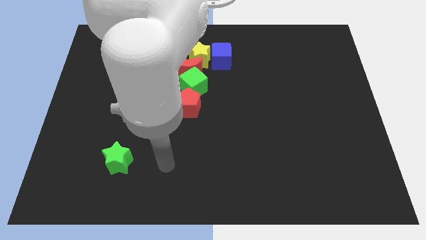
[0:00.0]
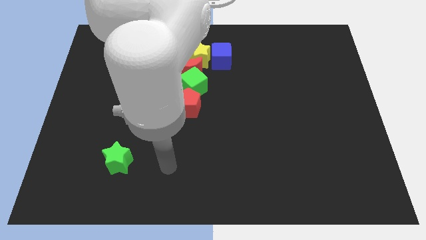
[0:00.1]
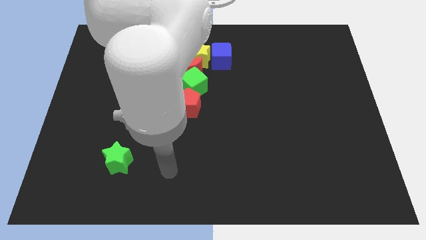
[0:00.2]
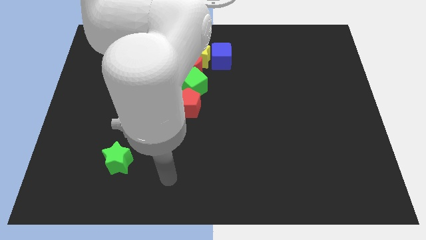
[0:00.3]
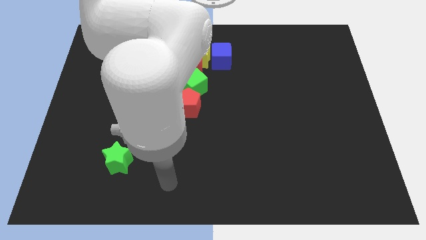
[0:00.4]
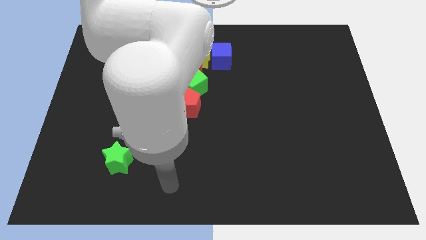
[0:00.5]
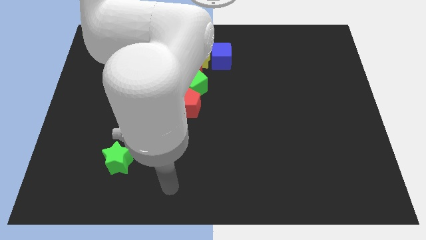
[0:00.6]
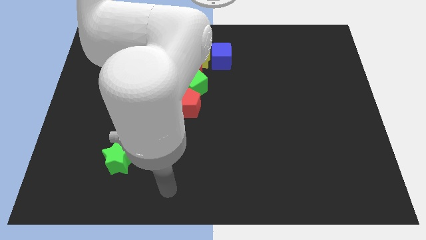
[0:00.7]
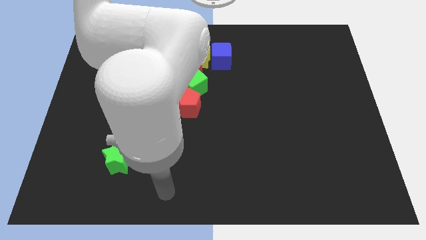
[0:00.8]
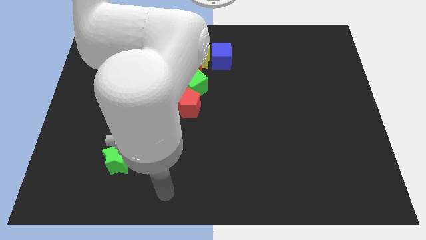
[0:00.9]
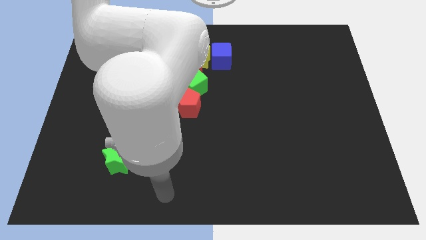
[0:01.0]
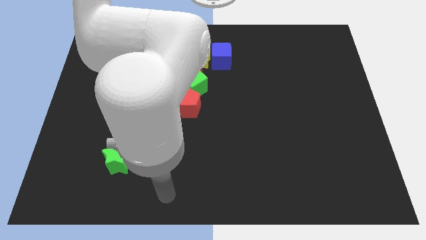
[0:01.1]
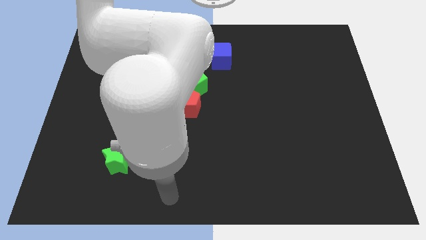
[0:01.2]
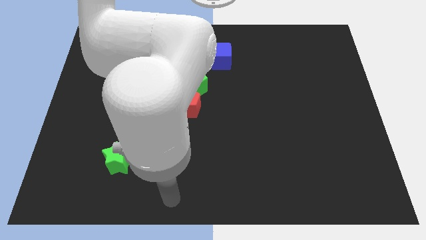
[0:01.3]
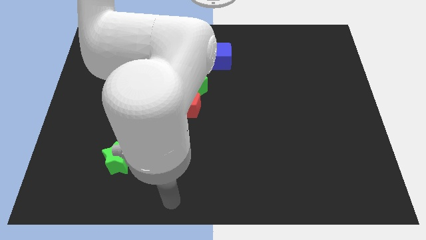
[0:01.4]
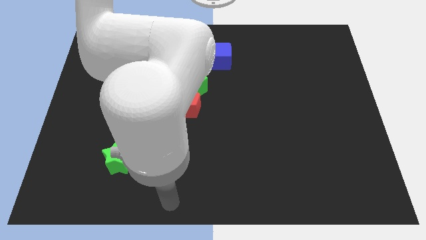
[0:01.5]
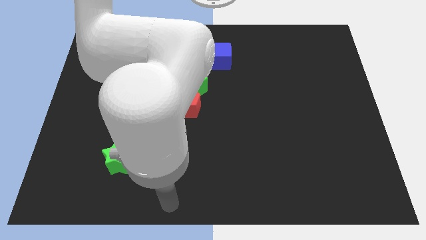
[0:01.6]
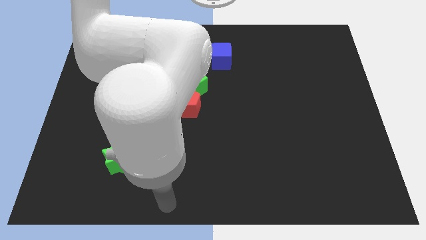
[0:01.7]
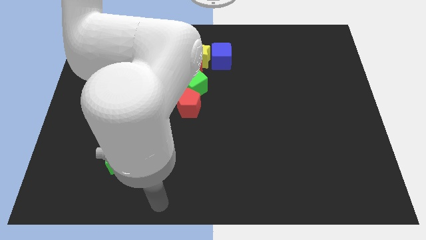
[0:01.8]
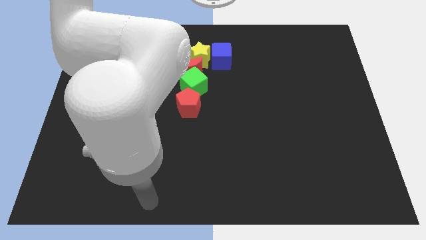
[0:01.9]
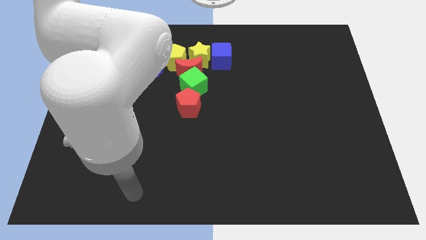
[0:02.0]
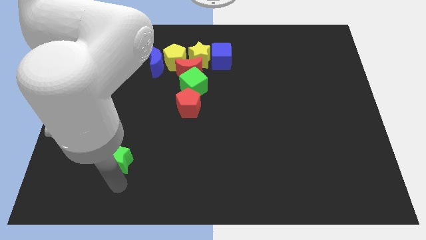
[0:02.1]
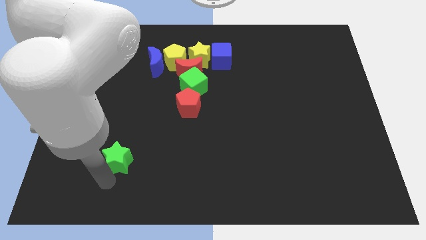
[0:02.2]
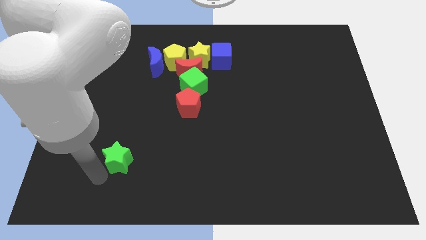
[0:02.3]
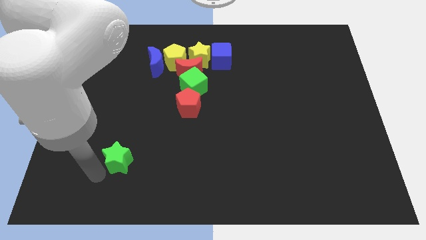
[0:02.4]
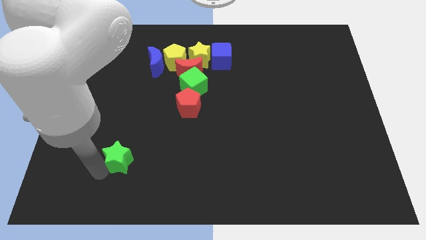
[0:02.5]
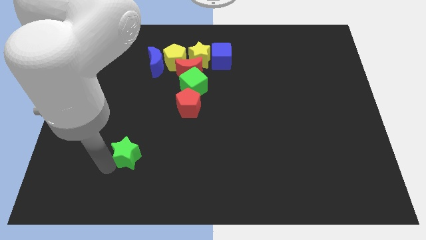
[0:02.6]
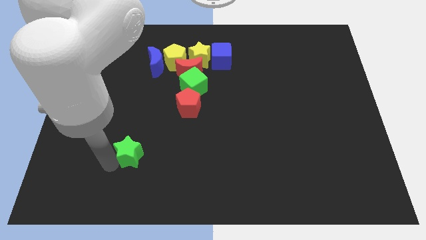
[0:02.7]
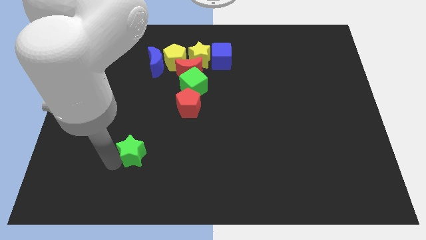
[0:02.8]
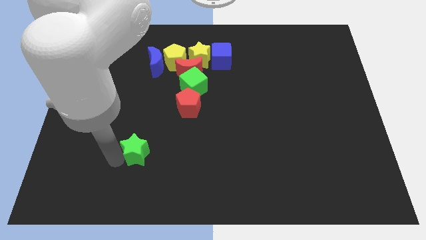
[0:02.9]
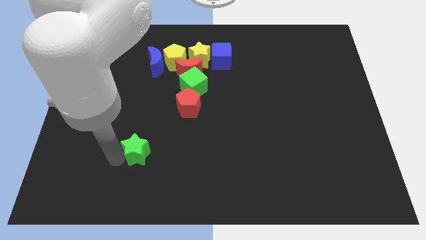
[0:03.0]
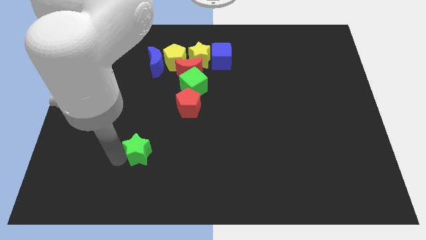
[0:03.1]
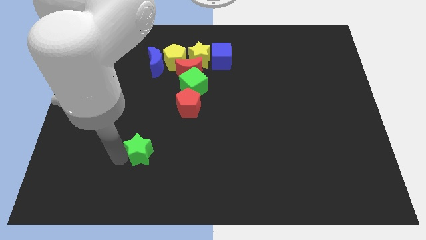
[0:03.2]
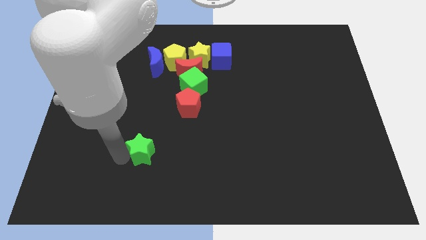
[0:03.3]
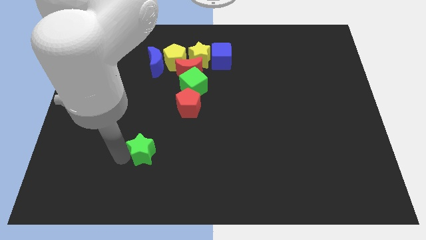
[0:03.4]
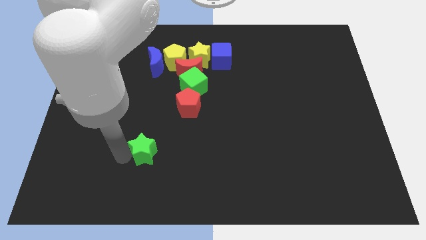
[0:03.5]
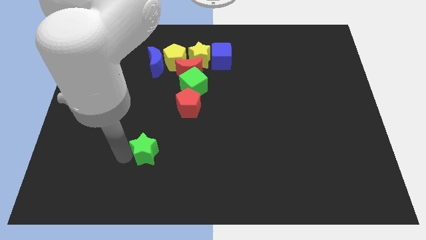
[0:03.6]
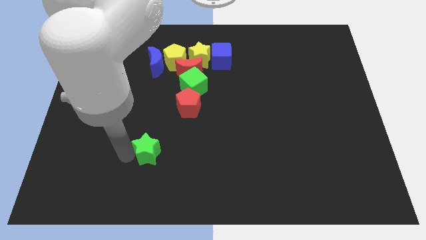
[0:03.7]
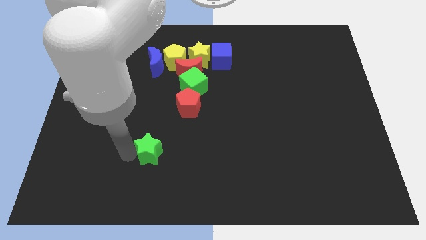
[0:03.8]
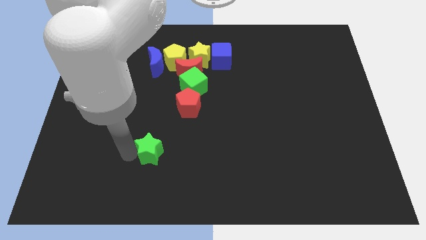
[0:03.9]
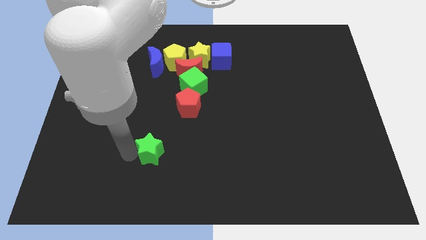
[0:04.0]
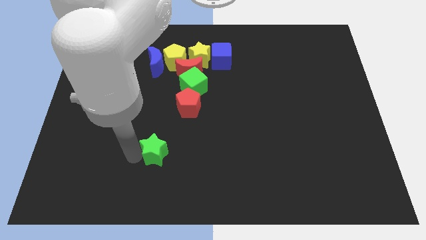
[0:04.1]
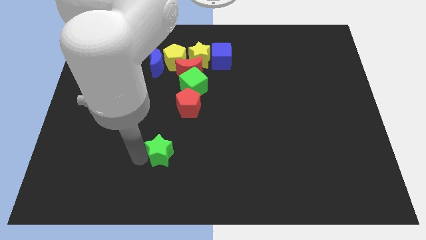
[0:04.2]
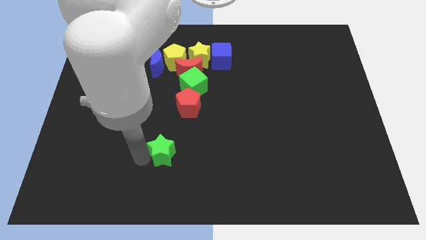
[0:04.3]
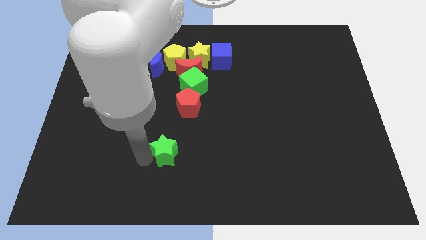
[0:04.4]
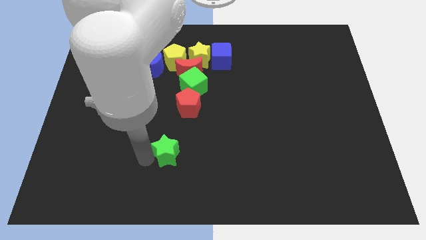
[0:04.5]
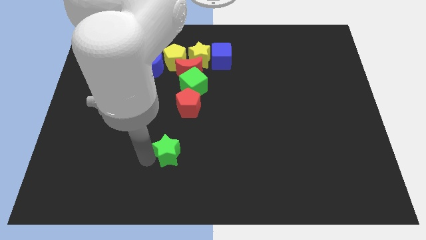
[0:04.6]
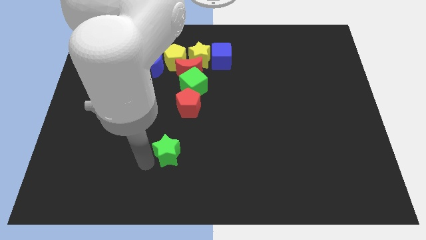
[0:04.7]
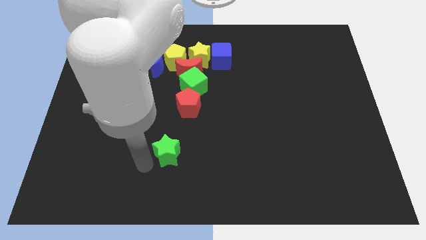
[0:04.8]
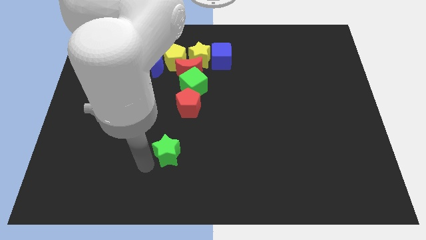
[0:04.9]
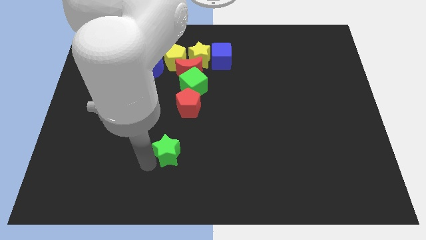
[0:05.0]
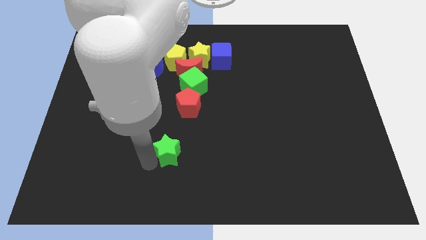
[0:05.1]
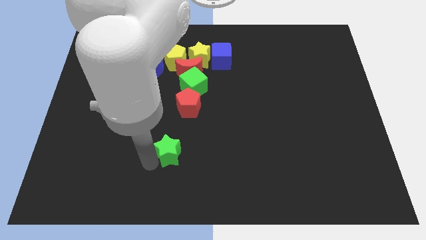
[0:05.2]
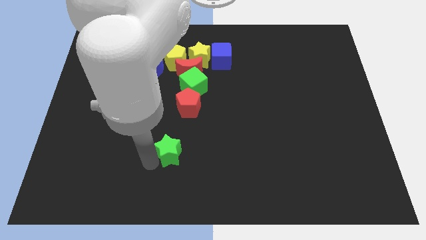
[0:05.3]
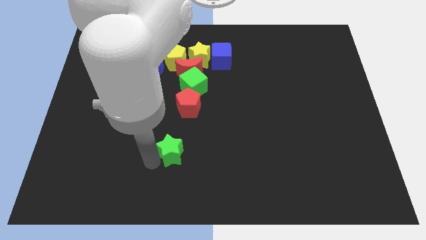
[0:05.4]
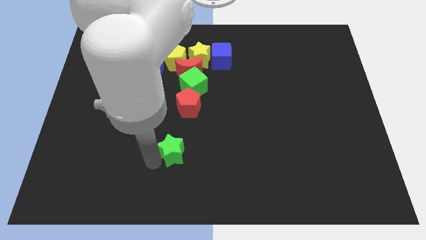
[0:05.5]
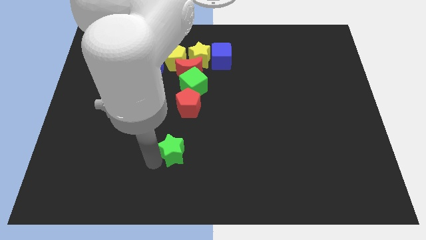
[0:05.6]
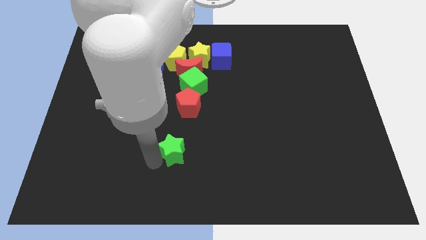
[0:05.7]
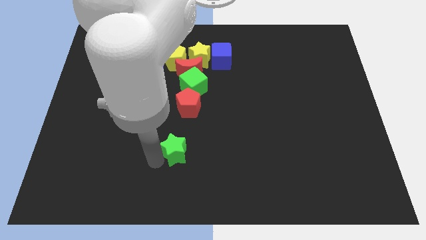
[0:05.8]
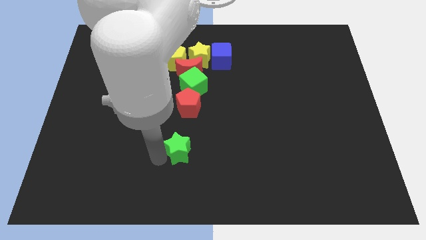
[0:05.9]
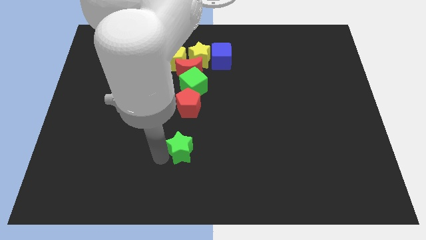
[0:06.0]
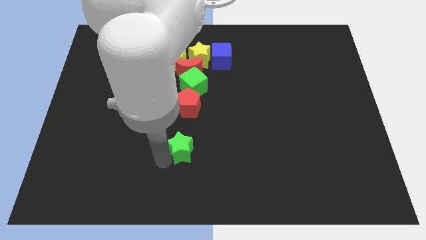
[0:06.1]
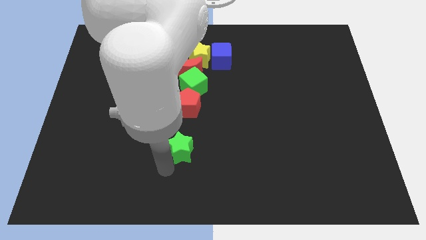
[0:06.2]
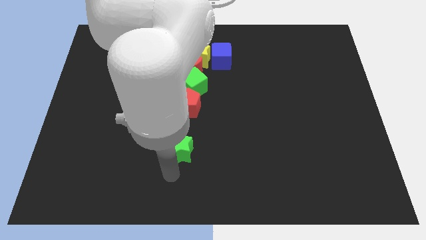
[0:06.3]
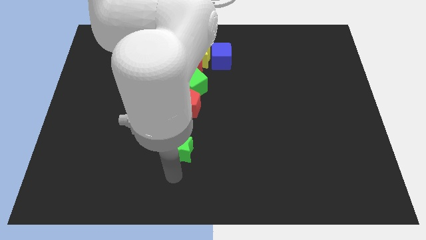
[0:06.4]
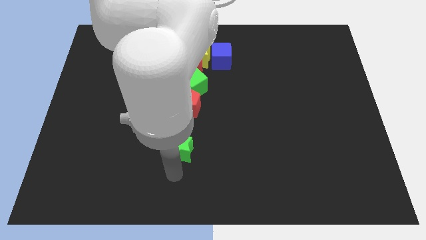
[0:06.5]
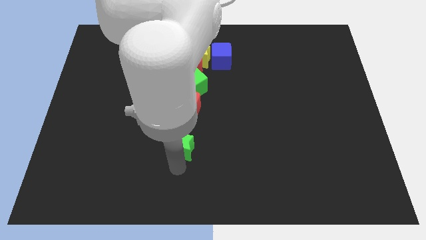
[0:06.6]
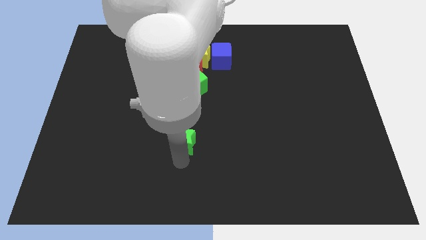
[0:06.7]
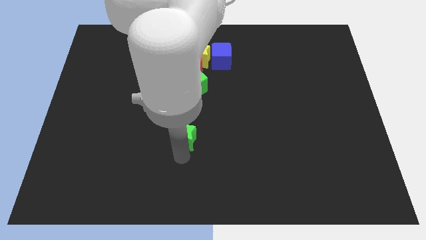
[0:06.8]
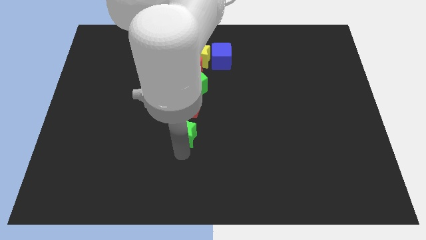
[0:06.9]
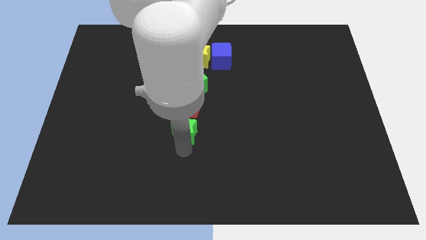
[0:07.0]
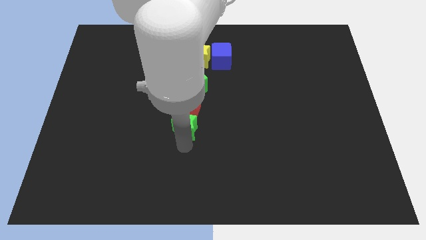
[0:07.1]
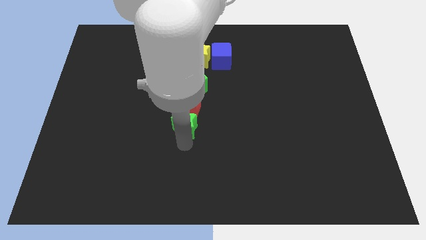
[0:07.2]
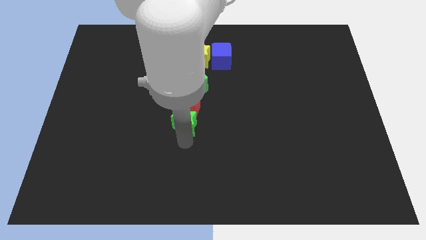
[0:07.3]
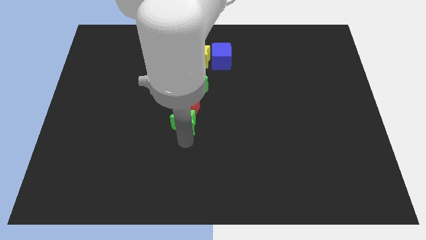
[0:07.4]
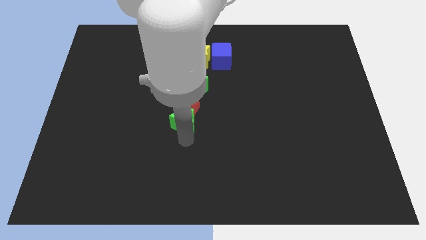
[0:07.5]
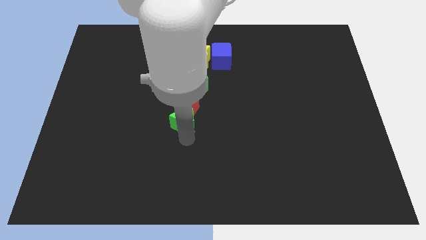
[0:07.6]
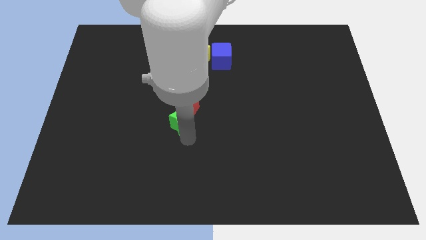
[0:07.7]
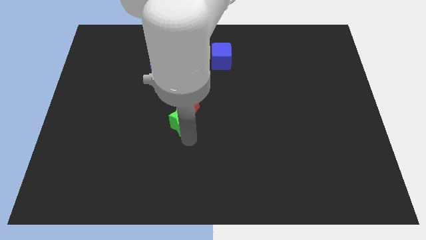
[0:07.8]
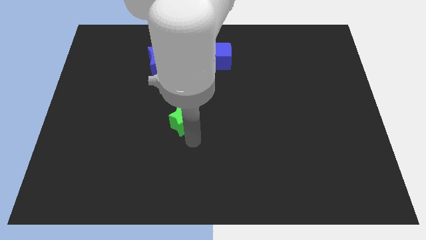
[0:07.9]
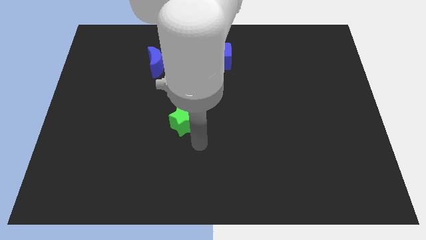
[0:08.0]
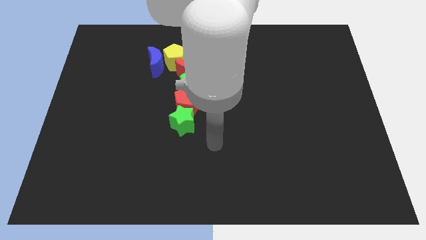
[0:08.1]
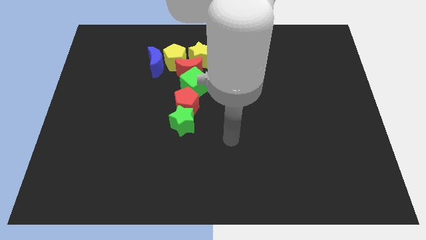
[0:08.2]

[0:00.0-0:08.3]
push the green star into the red pentagon

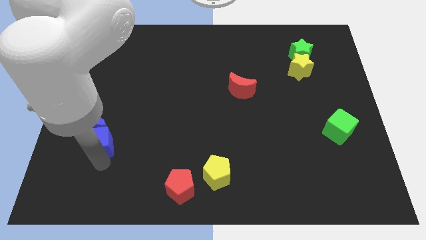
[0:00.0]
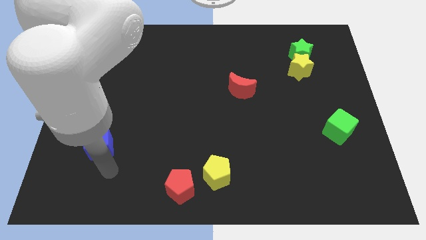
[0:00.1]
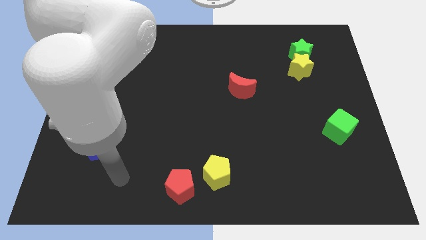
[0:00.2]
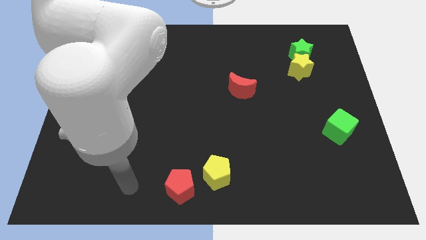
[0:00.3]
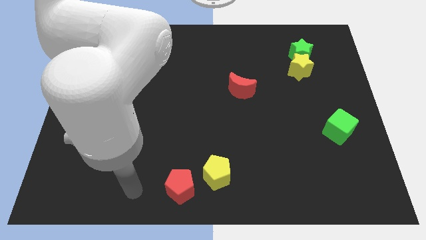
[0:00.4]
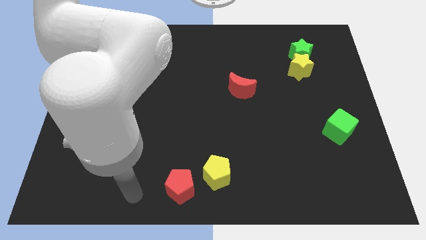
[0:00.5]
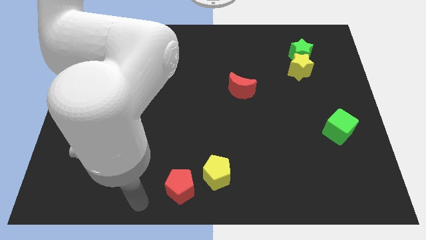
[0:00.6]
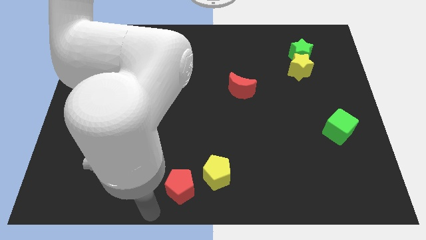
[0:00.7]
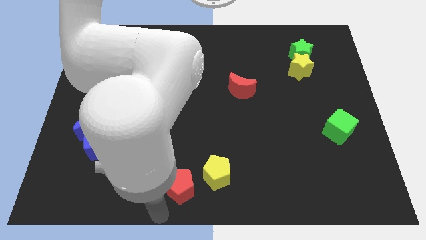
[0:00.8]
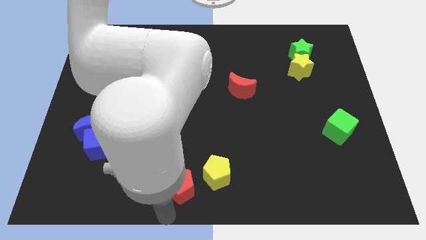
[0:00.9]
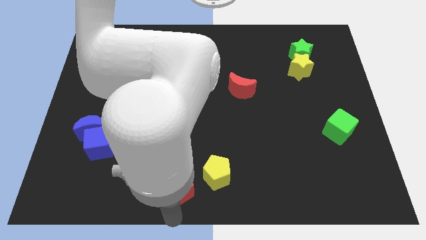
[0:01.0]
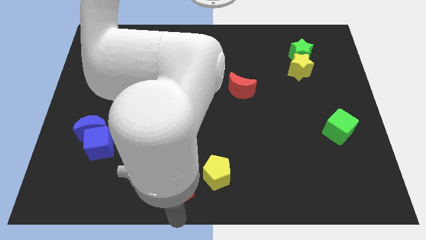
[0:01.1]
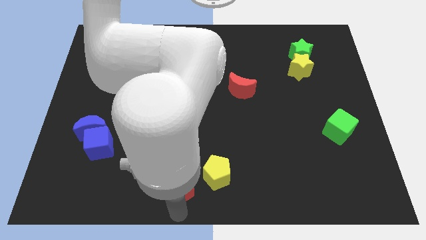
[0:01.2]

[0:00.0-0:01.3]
move your arm to the bottom of the red pentagon
